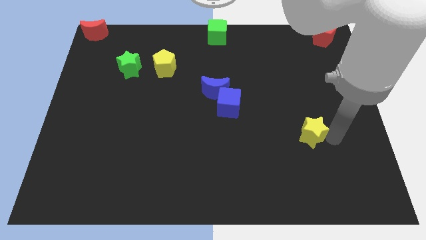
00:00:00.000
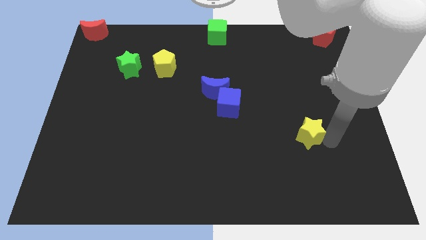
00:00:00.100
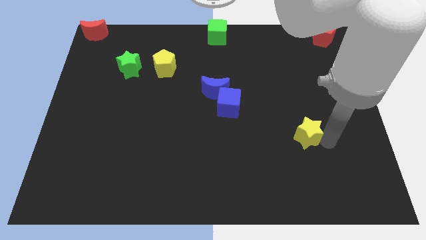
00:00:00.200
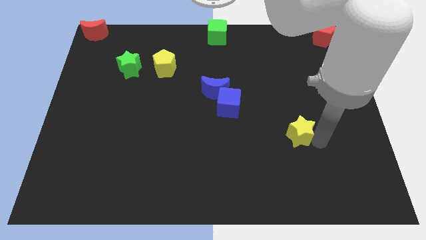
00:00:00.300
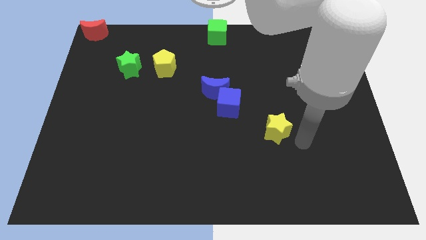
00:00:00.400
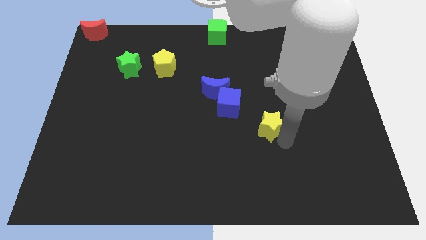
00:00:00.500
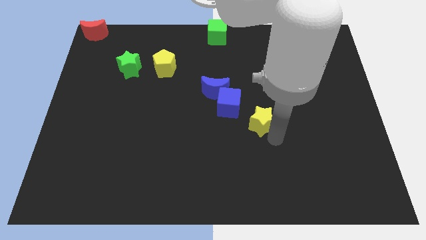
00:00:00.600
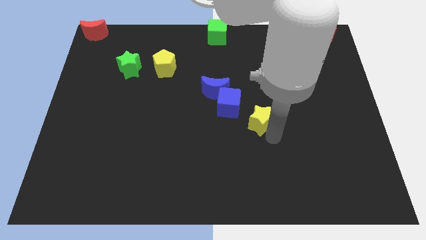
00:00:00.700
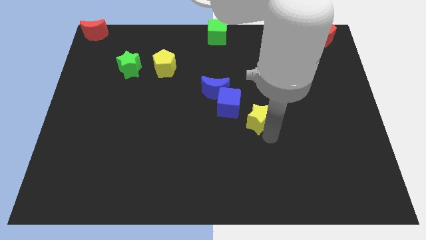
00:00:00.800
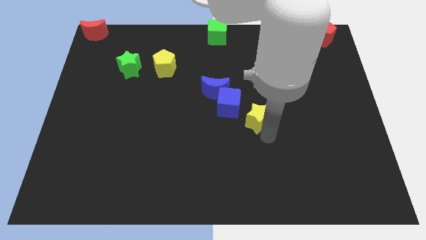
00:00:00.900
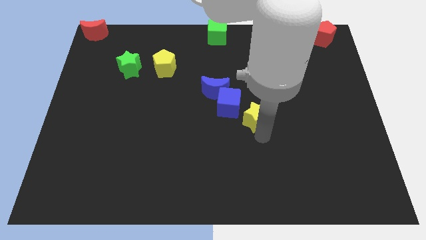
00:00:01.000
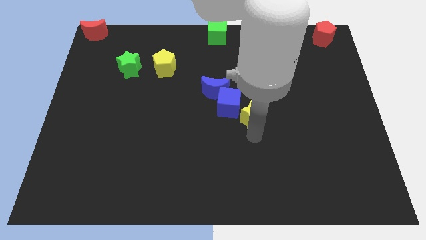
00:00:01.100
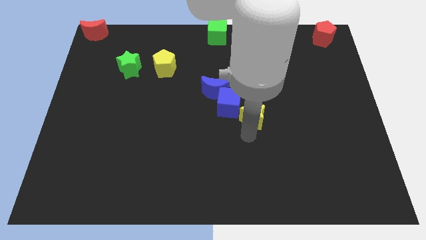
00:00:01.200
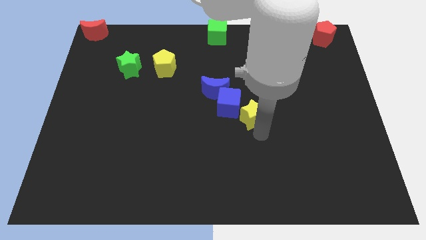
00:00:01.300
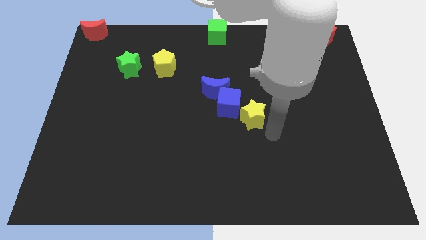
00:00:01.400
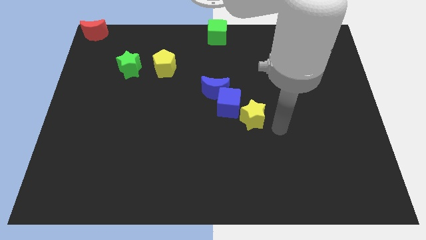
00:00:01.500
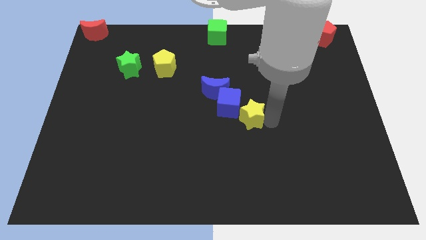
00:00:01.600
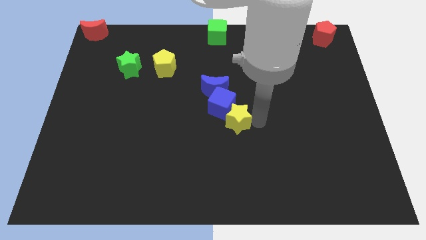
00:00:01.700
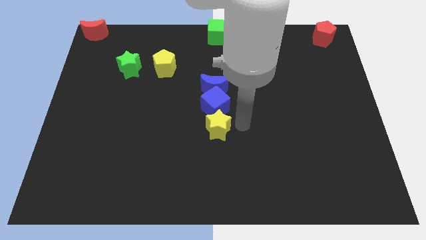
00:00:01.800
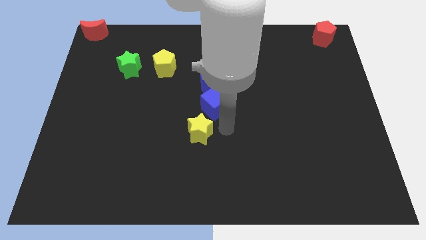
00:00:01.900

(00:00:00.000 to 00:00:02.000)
place yellow star below blue cube

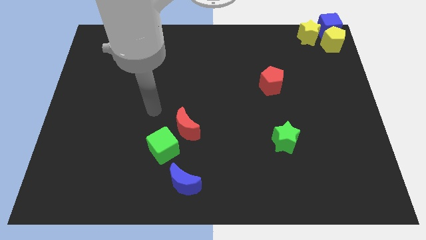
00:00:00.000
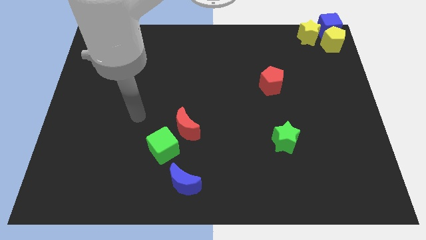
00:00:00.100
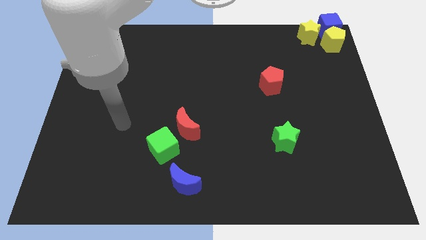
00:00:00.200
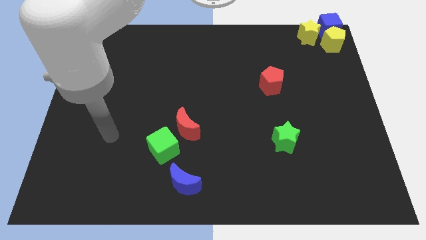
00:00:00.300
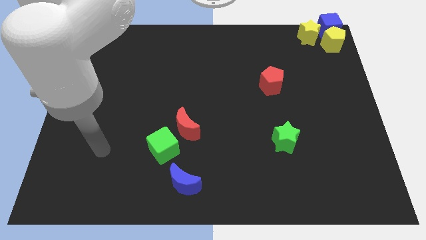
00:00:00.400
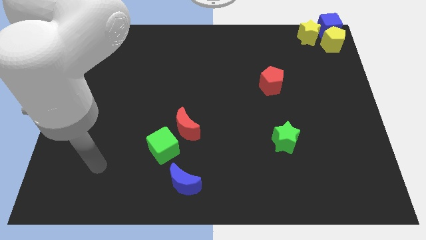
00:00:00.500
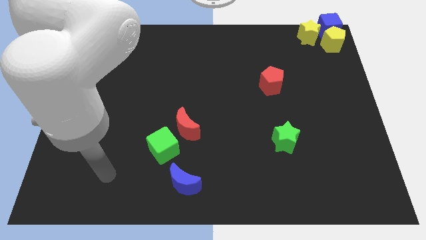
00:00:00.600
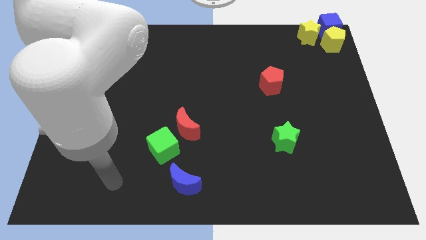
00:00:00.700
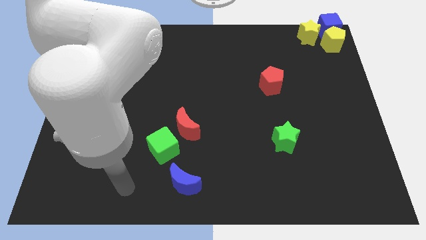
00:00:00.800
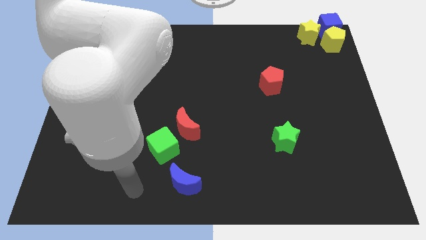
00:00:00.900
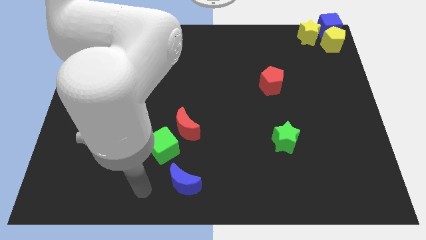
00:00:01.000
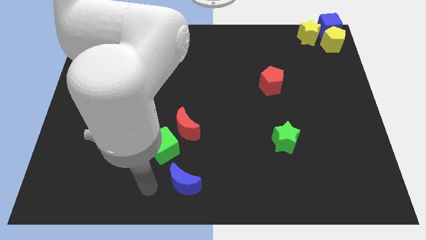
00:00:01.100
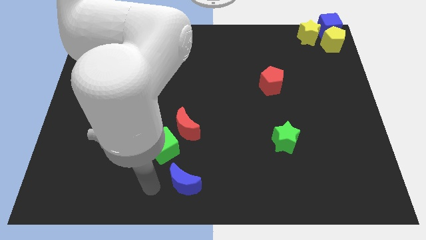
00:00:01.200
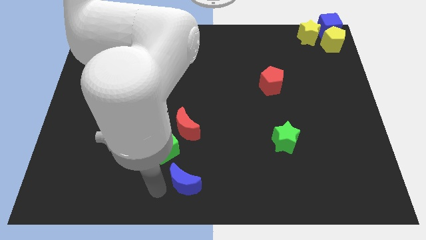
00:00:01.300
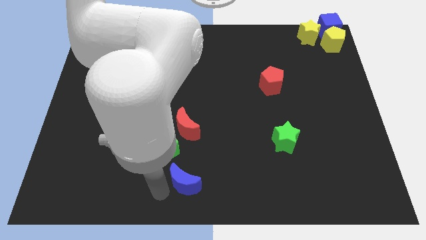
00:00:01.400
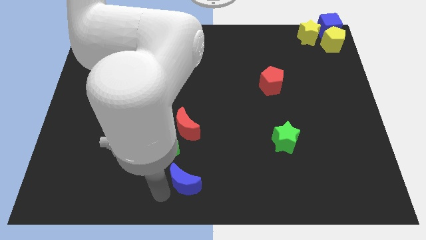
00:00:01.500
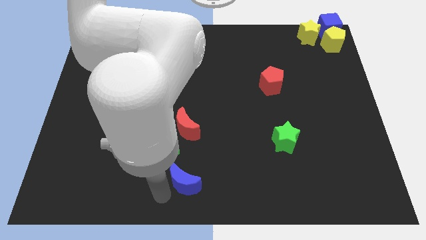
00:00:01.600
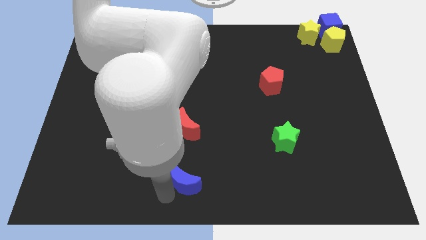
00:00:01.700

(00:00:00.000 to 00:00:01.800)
move arm bottom left side of the blue moon

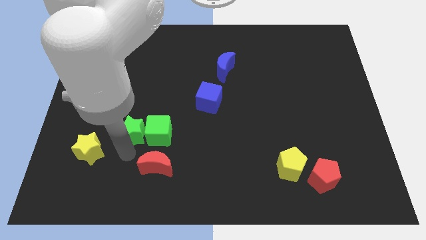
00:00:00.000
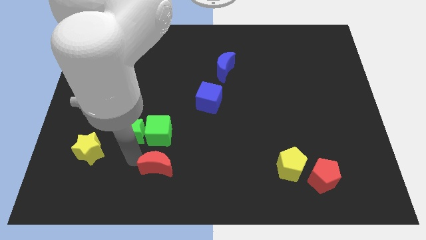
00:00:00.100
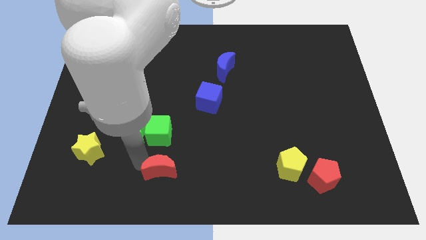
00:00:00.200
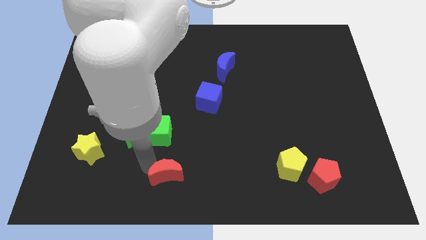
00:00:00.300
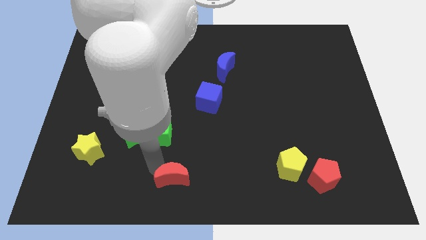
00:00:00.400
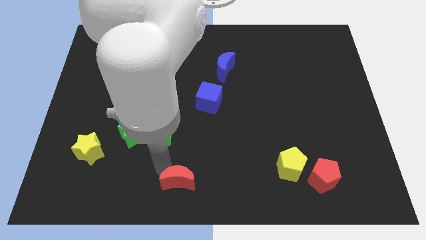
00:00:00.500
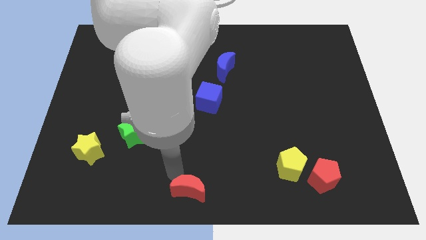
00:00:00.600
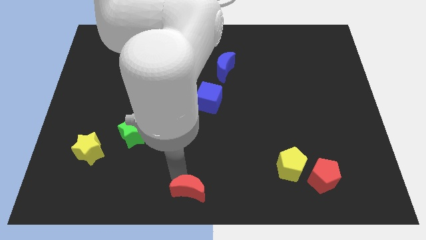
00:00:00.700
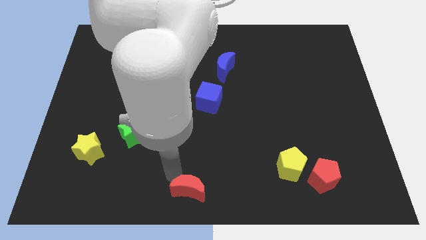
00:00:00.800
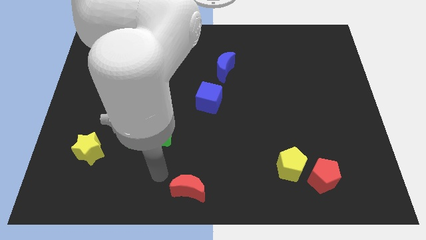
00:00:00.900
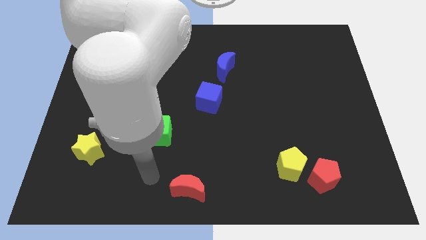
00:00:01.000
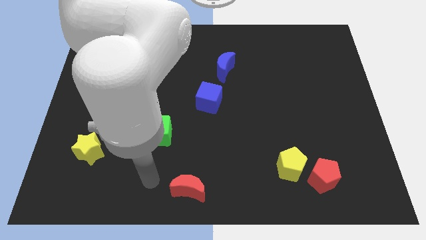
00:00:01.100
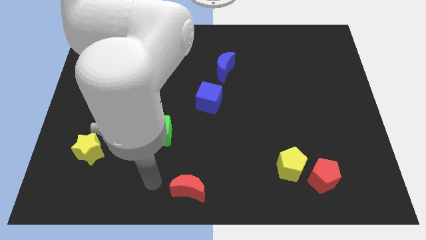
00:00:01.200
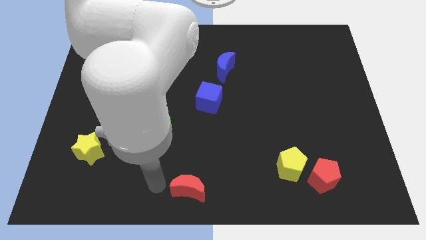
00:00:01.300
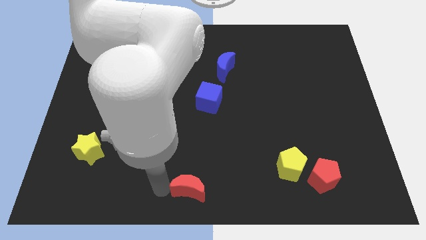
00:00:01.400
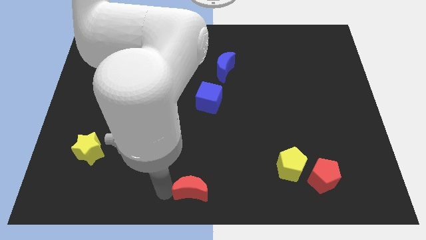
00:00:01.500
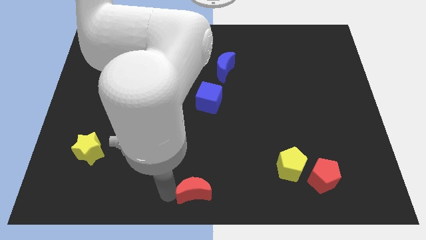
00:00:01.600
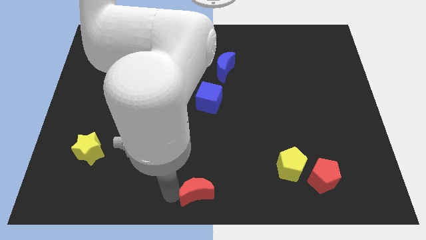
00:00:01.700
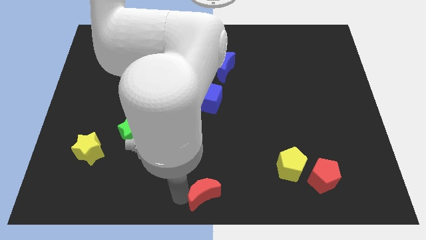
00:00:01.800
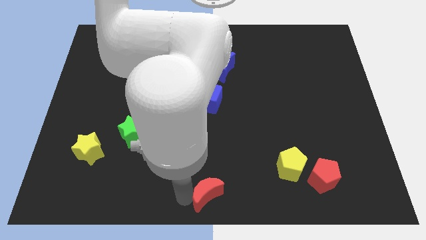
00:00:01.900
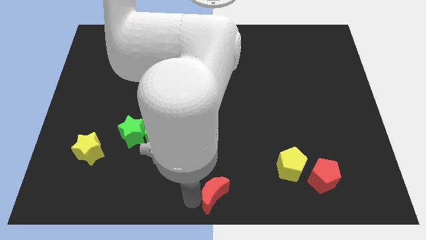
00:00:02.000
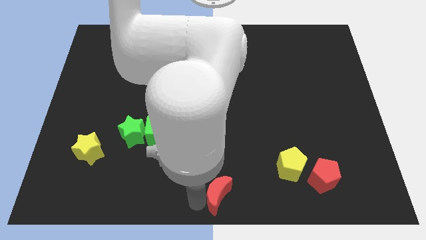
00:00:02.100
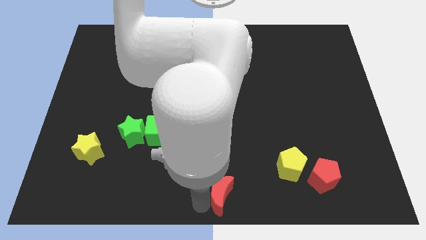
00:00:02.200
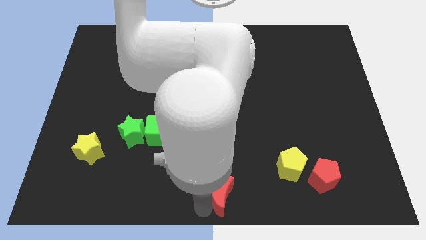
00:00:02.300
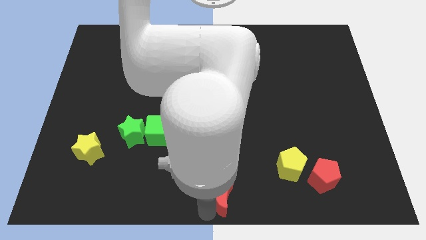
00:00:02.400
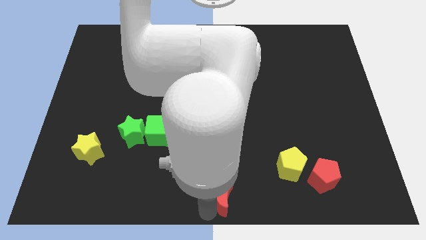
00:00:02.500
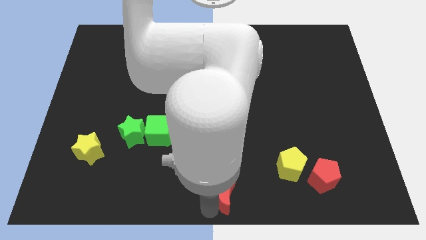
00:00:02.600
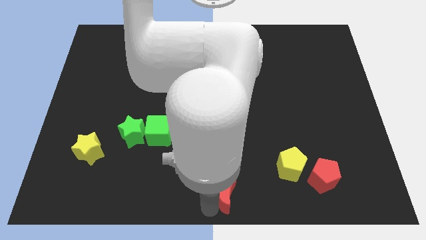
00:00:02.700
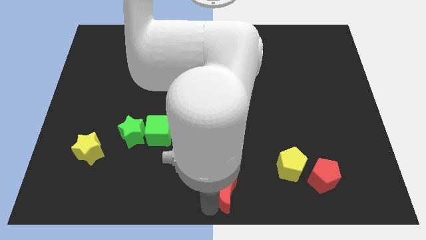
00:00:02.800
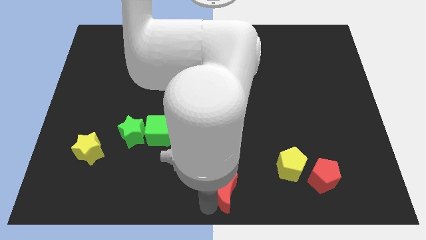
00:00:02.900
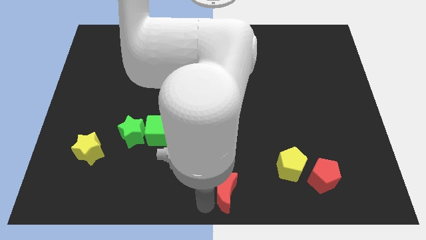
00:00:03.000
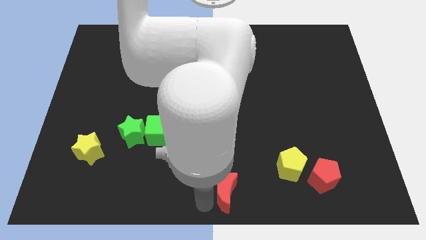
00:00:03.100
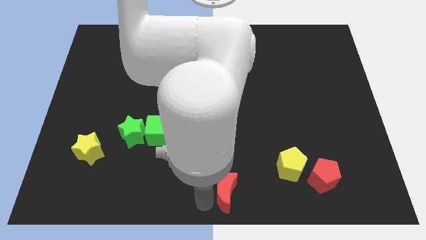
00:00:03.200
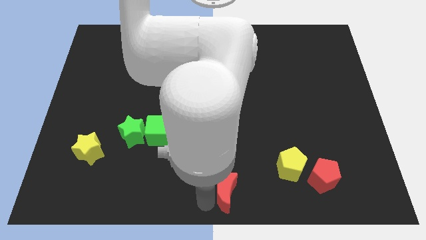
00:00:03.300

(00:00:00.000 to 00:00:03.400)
move the red moon to the right side of the board

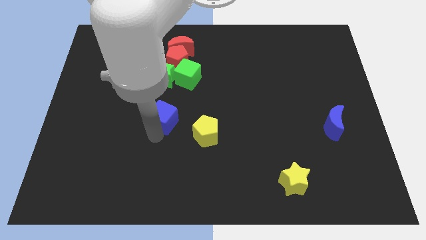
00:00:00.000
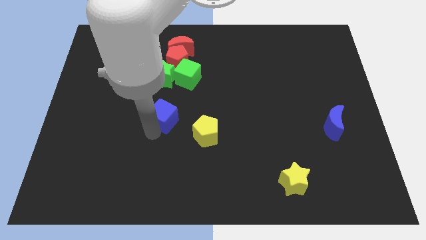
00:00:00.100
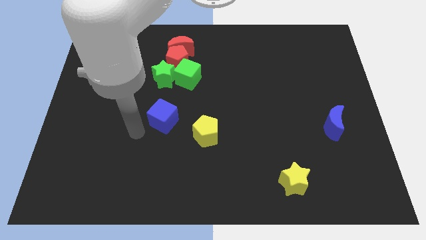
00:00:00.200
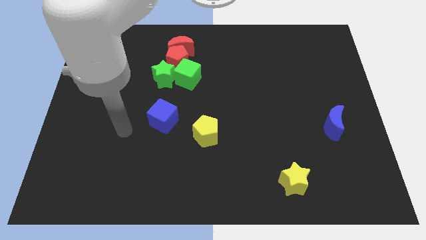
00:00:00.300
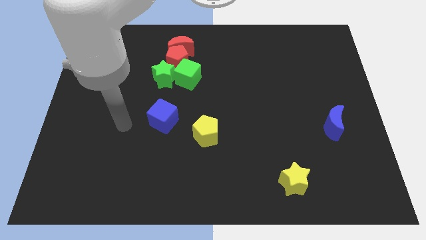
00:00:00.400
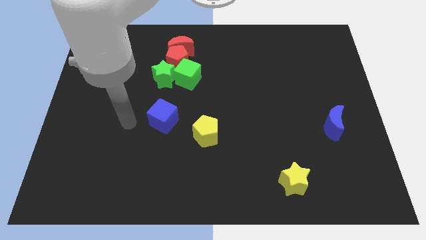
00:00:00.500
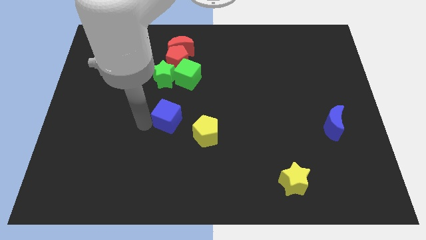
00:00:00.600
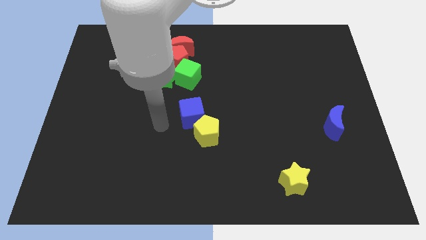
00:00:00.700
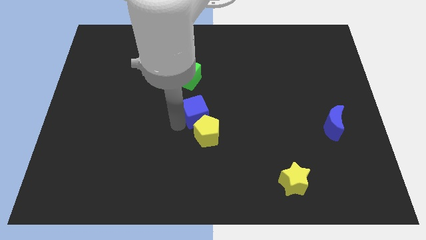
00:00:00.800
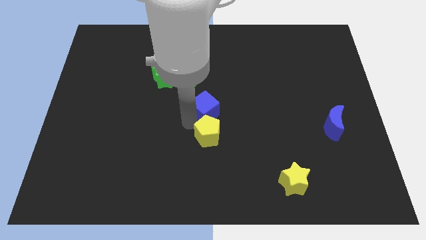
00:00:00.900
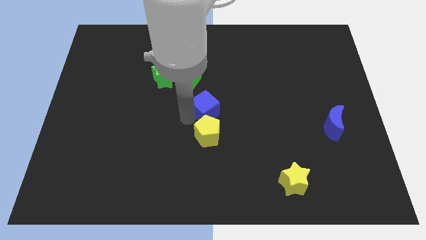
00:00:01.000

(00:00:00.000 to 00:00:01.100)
place blue cube above the yellow pentagon

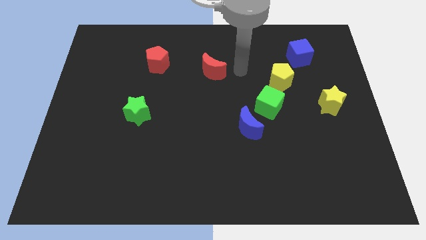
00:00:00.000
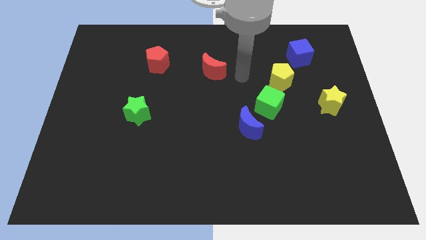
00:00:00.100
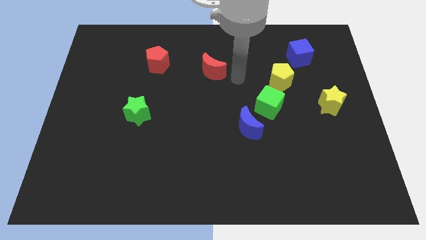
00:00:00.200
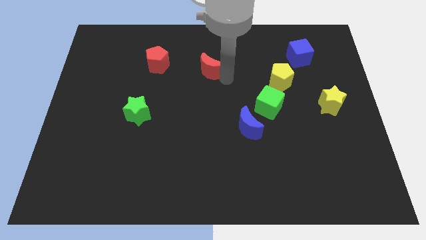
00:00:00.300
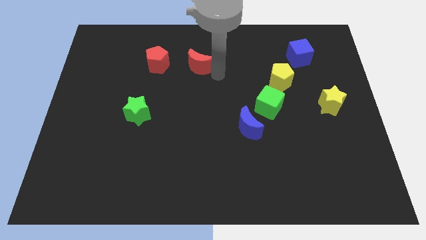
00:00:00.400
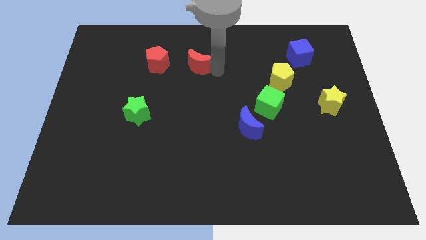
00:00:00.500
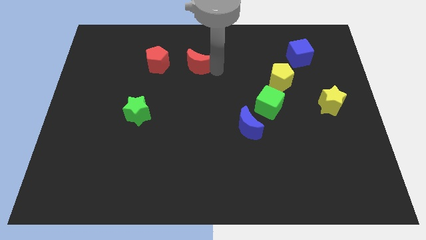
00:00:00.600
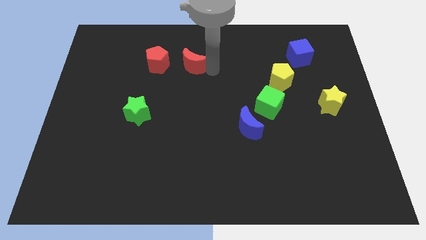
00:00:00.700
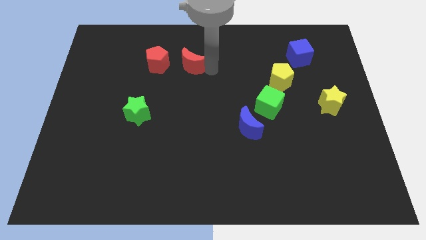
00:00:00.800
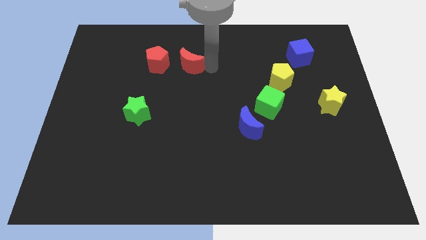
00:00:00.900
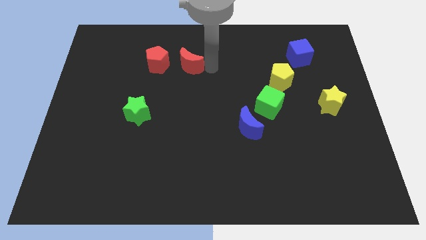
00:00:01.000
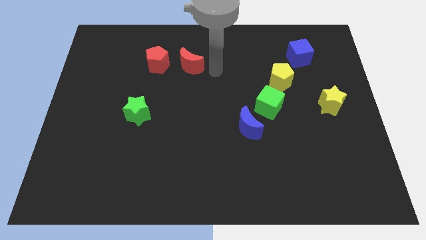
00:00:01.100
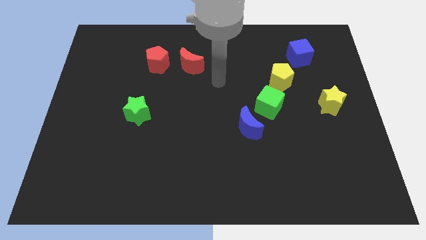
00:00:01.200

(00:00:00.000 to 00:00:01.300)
drag the red moon close to the red pentagon
